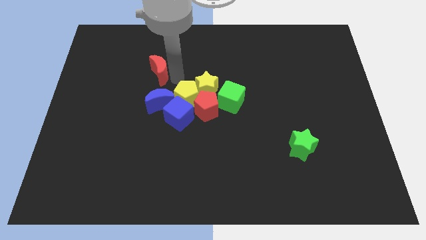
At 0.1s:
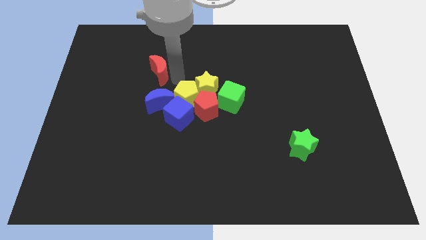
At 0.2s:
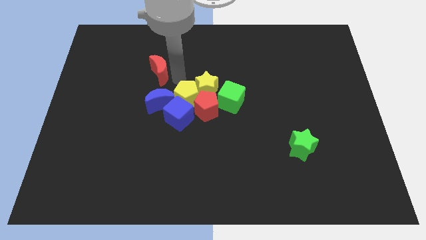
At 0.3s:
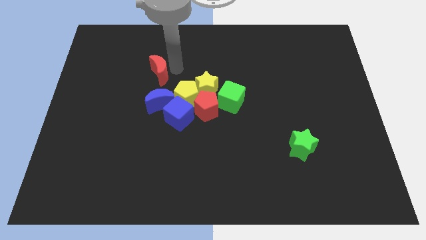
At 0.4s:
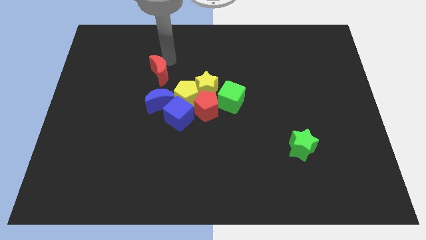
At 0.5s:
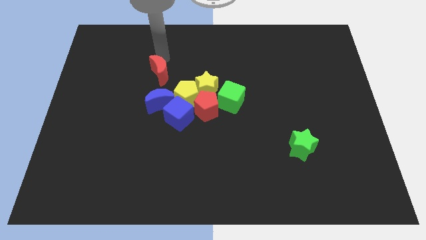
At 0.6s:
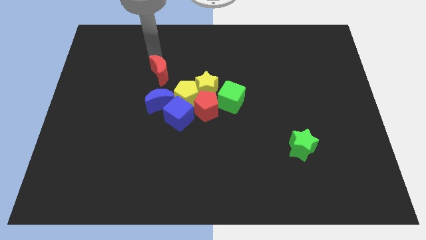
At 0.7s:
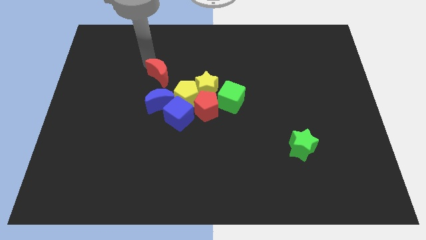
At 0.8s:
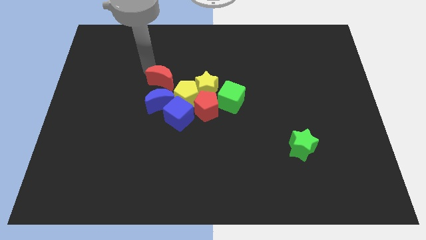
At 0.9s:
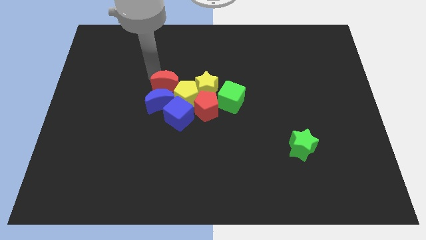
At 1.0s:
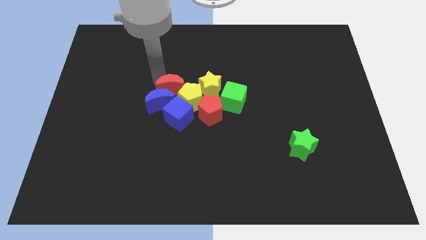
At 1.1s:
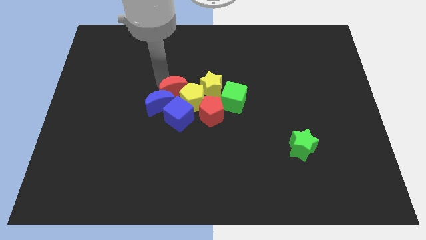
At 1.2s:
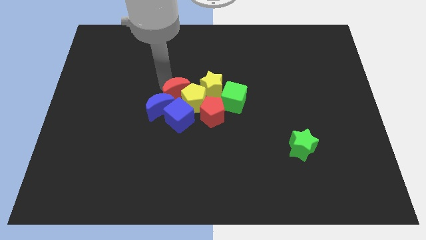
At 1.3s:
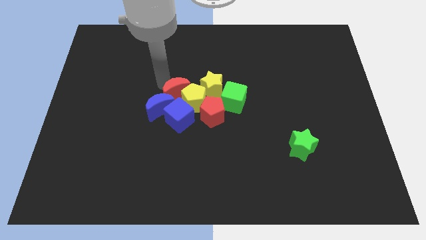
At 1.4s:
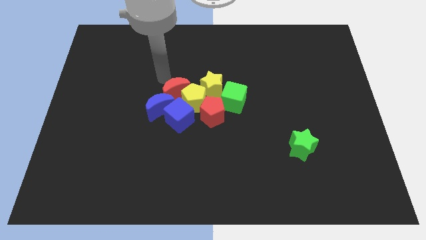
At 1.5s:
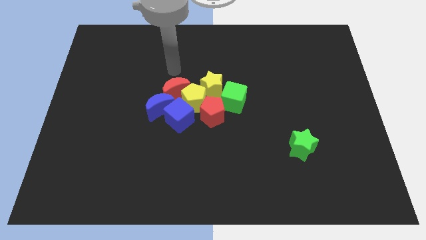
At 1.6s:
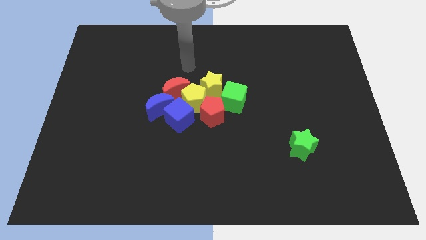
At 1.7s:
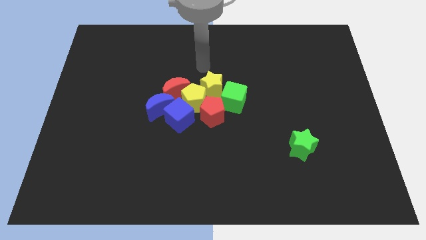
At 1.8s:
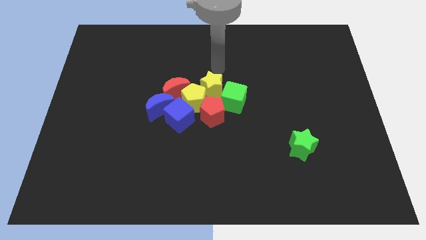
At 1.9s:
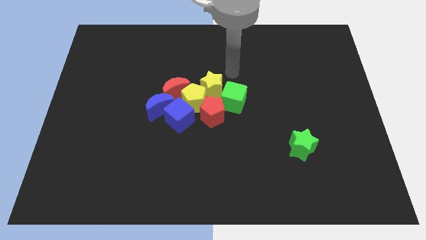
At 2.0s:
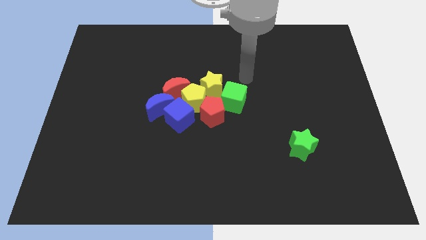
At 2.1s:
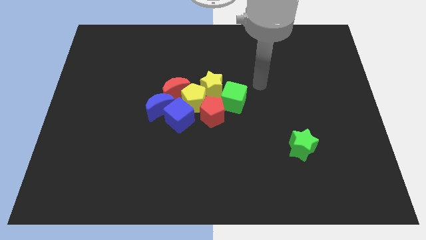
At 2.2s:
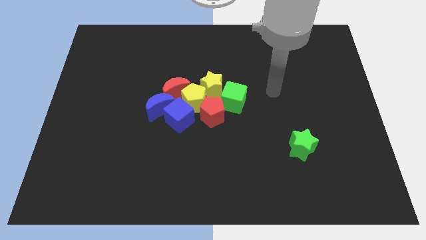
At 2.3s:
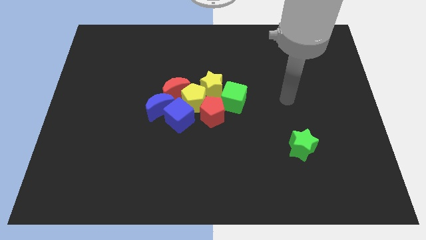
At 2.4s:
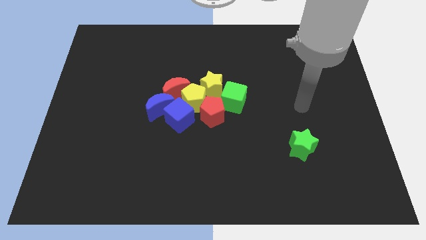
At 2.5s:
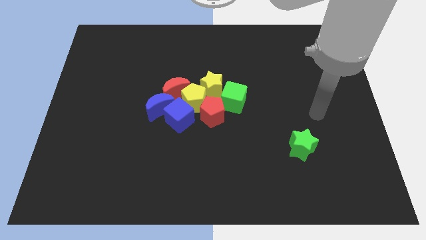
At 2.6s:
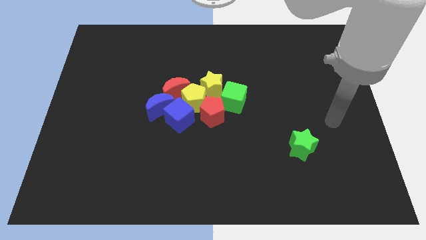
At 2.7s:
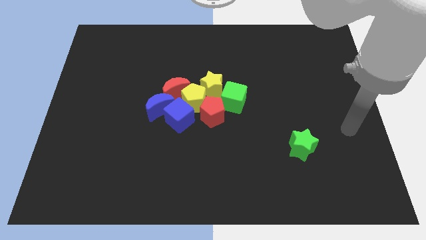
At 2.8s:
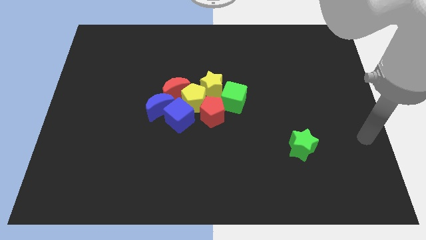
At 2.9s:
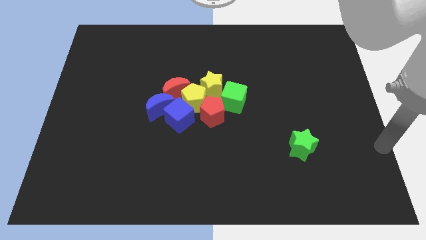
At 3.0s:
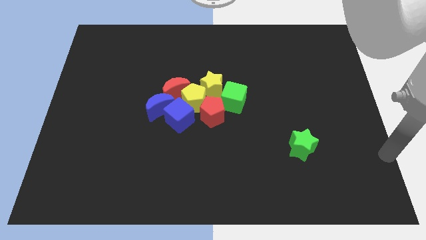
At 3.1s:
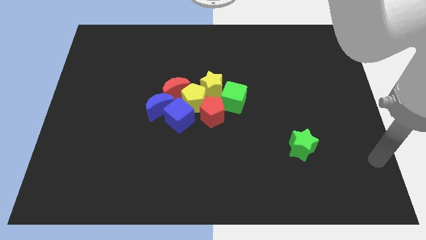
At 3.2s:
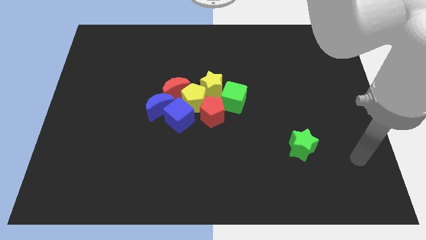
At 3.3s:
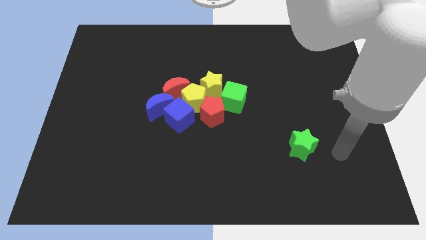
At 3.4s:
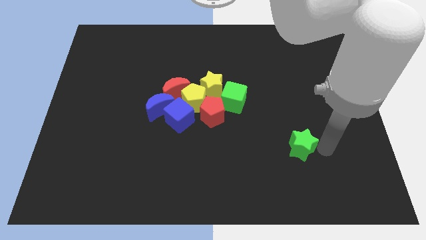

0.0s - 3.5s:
move the arm to the right of the green star

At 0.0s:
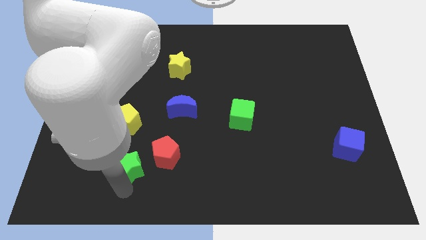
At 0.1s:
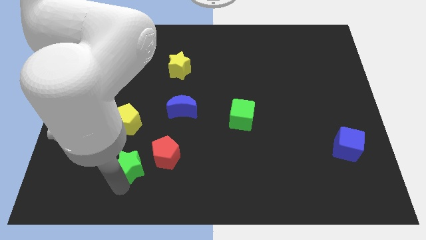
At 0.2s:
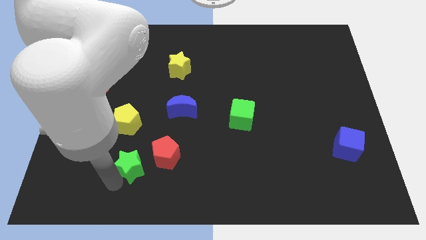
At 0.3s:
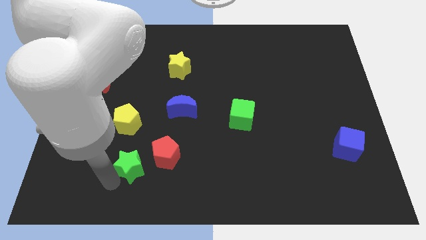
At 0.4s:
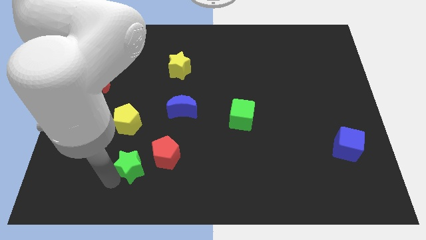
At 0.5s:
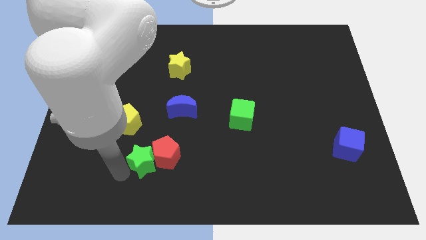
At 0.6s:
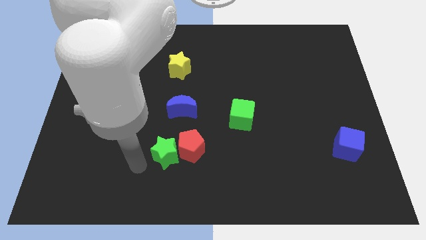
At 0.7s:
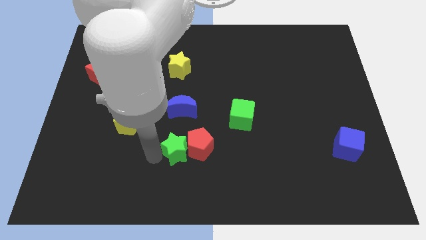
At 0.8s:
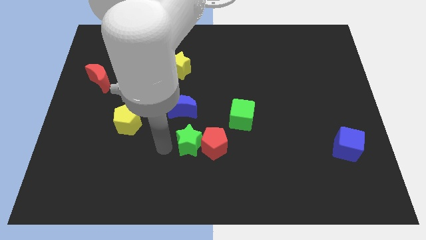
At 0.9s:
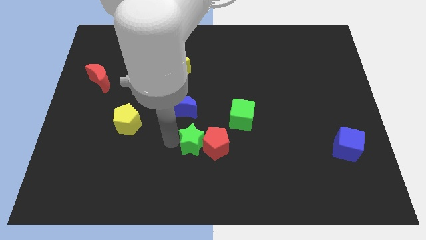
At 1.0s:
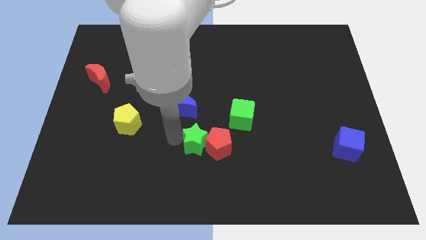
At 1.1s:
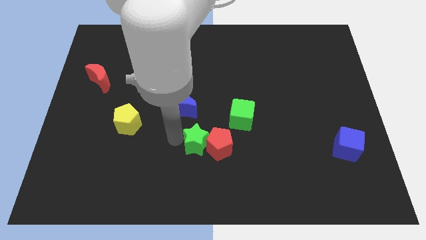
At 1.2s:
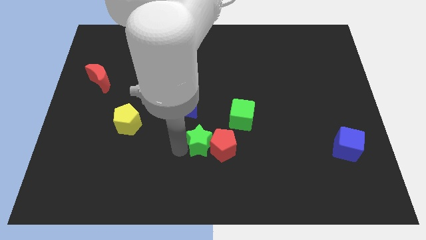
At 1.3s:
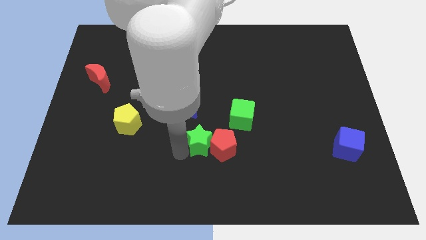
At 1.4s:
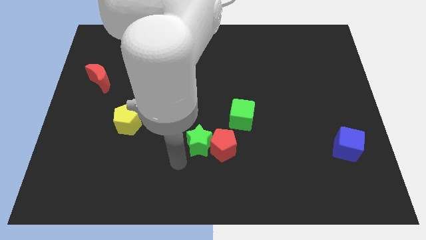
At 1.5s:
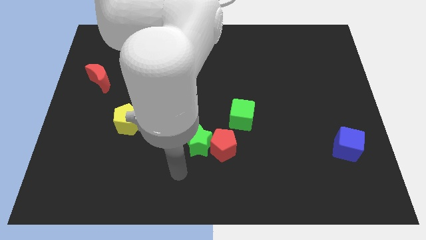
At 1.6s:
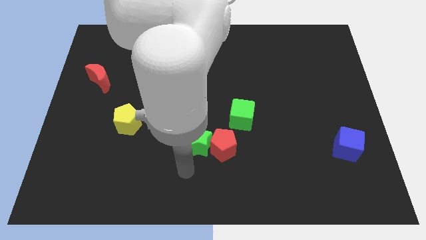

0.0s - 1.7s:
push the green star into the red pentagon

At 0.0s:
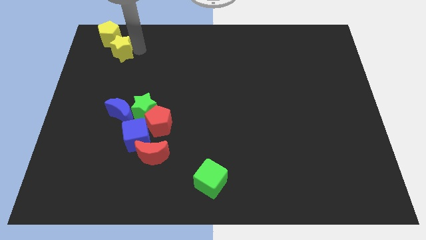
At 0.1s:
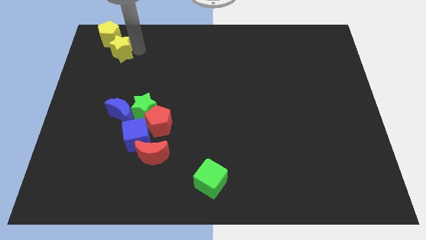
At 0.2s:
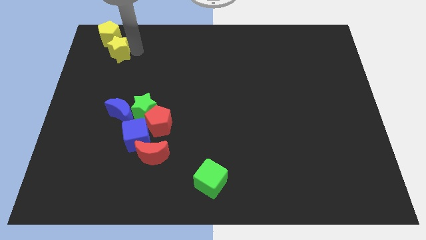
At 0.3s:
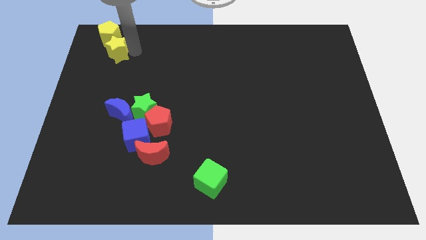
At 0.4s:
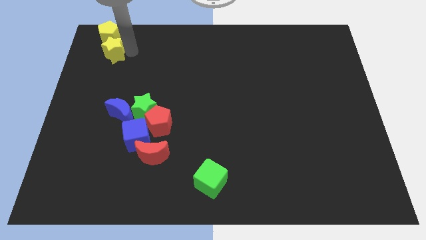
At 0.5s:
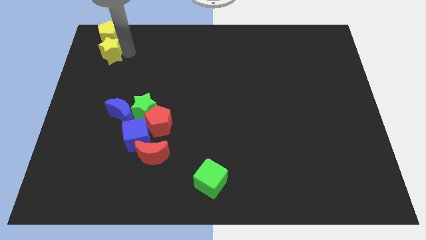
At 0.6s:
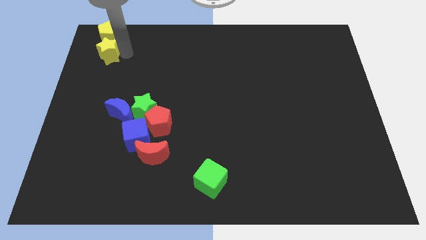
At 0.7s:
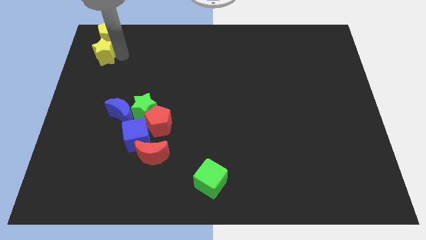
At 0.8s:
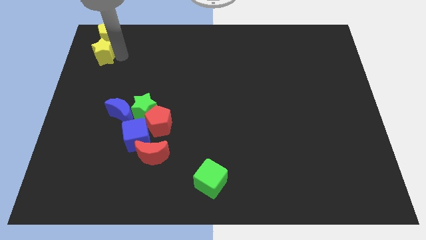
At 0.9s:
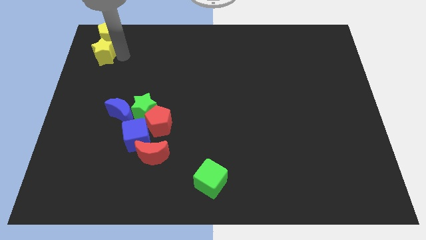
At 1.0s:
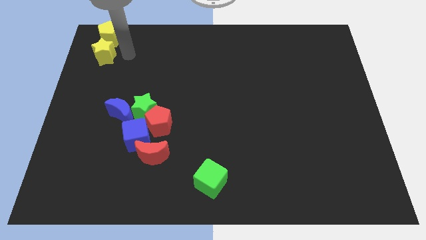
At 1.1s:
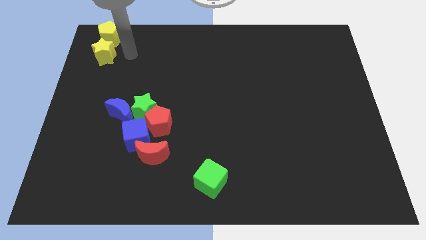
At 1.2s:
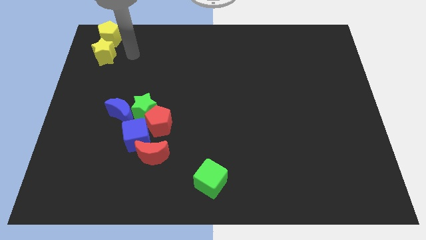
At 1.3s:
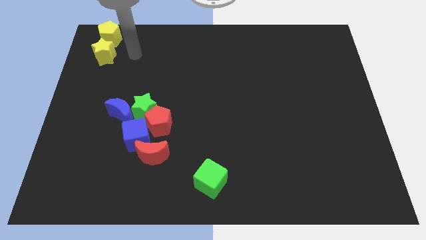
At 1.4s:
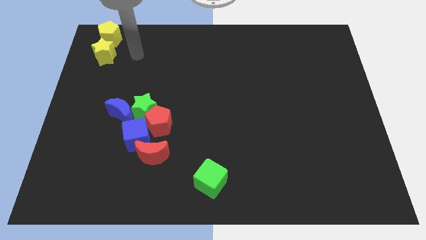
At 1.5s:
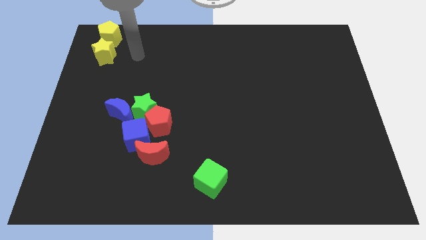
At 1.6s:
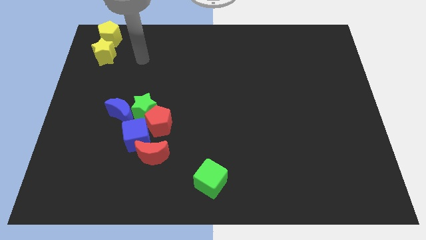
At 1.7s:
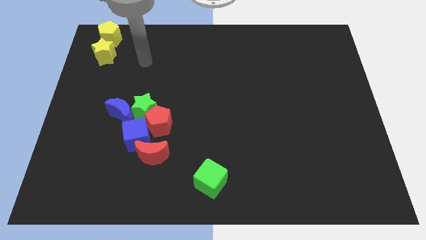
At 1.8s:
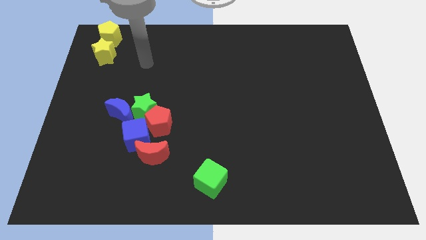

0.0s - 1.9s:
move the yellow star below the yellow pentagon

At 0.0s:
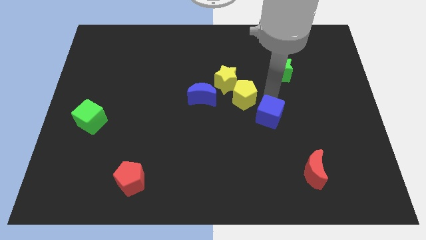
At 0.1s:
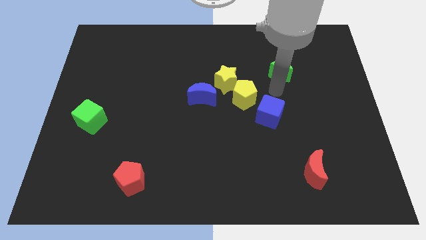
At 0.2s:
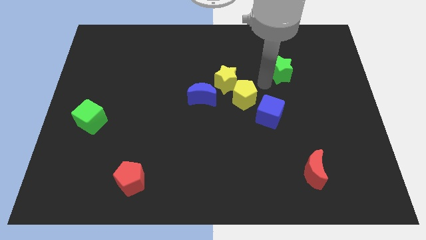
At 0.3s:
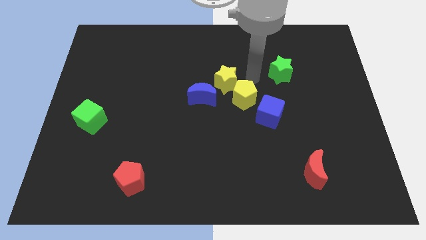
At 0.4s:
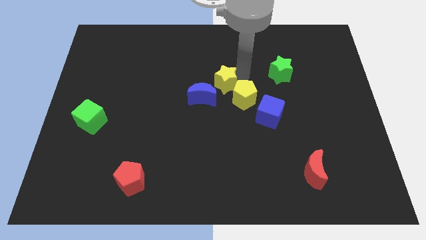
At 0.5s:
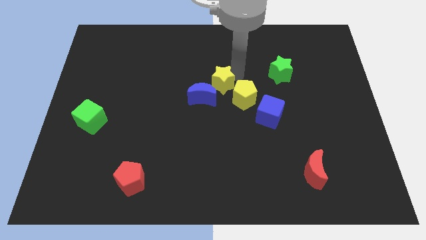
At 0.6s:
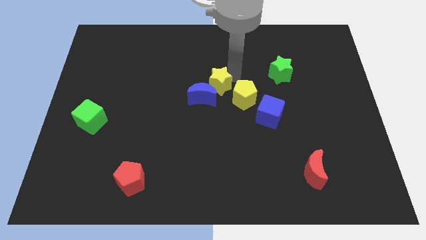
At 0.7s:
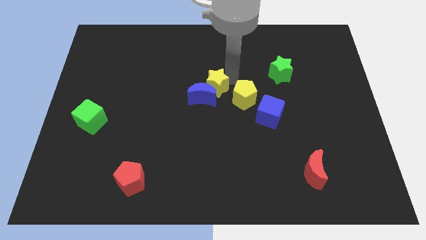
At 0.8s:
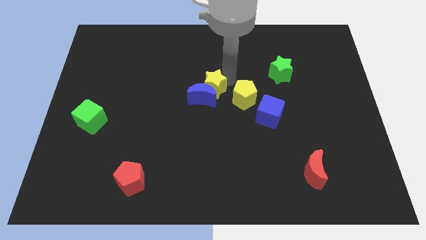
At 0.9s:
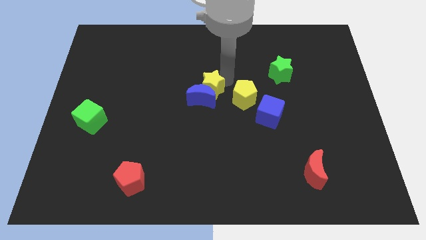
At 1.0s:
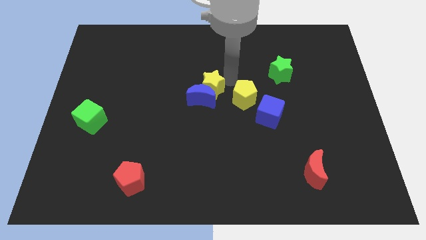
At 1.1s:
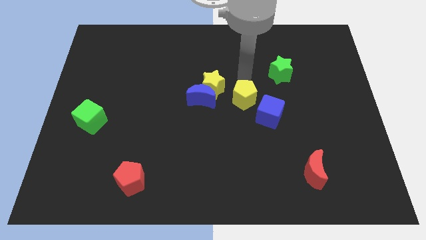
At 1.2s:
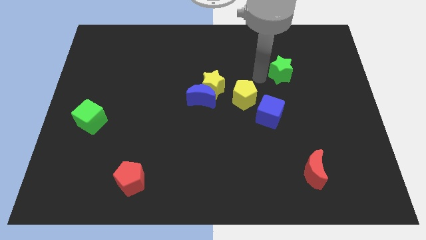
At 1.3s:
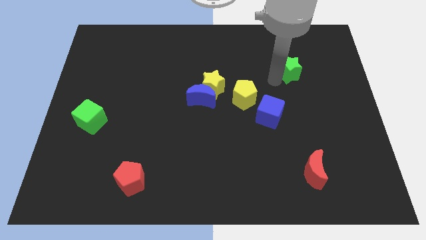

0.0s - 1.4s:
push the yellow star into the blue moon

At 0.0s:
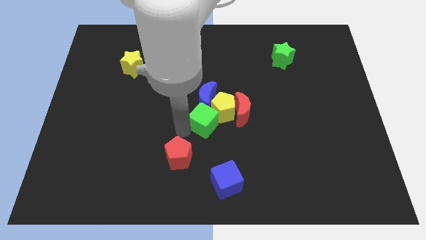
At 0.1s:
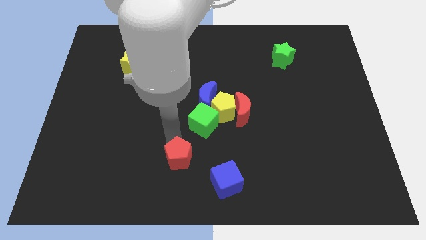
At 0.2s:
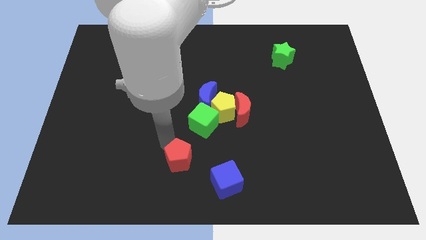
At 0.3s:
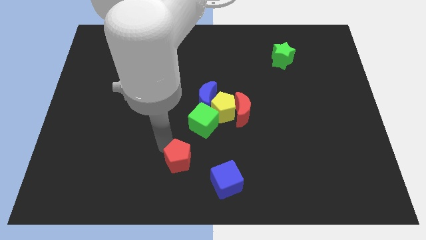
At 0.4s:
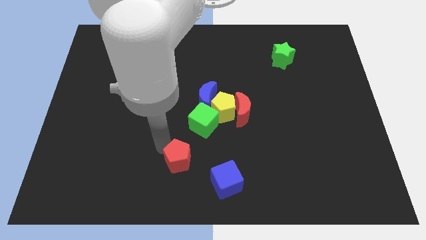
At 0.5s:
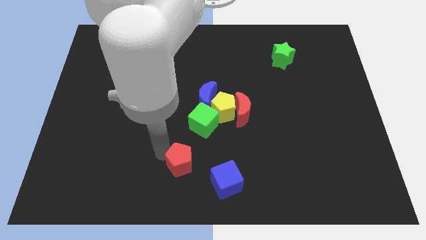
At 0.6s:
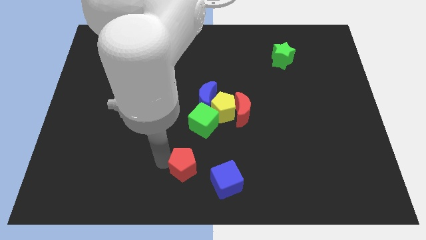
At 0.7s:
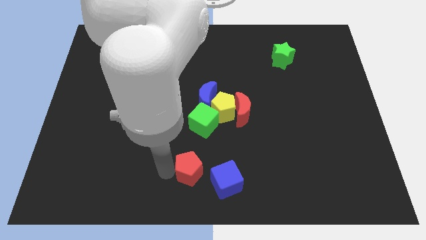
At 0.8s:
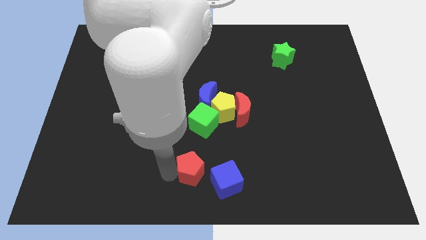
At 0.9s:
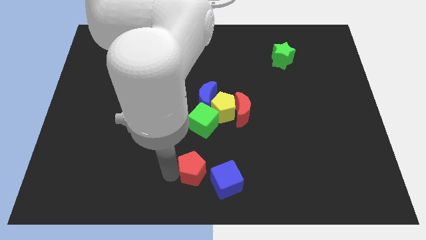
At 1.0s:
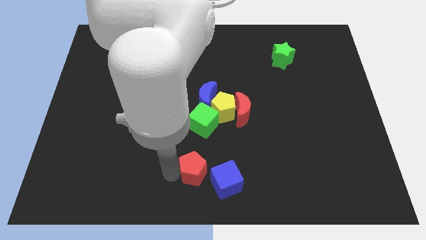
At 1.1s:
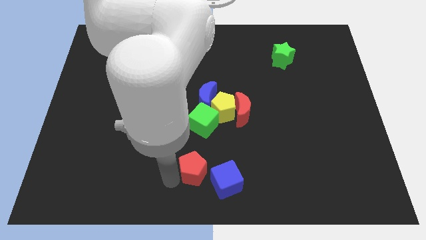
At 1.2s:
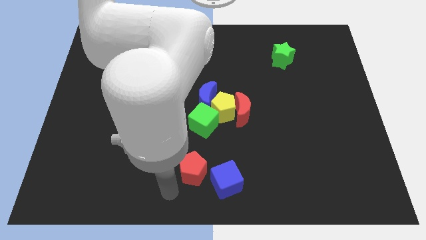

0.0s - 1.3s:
move the red pentagon to the top left of the blue cube
